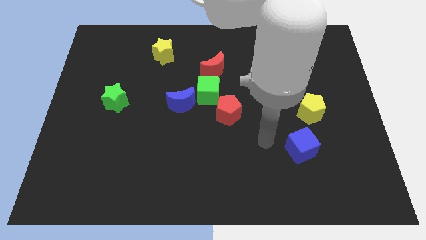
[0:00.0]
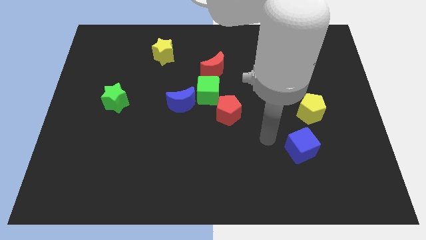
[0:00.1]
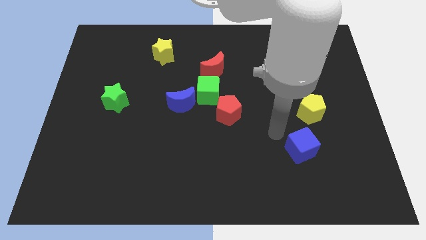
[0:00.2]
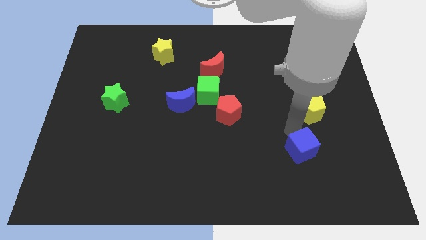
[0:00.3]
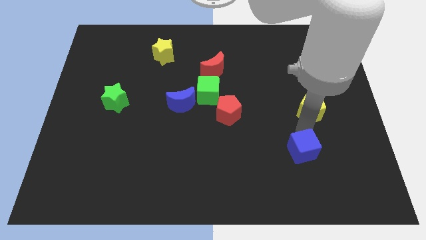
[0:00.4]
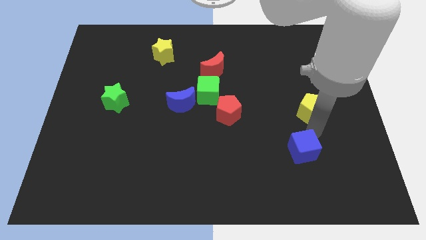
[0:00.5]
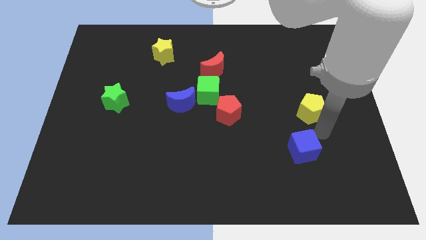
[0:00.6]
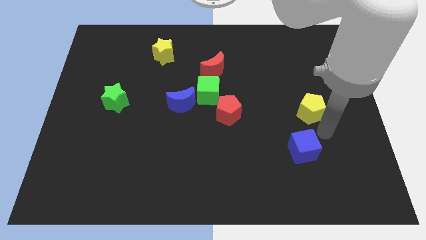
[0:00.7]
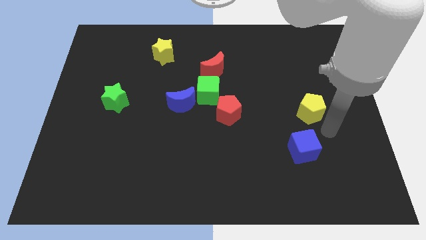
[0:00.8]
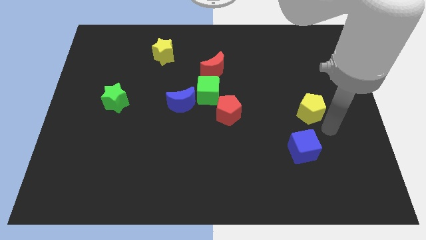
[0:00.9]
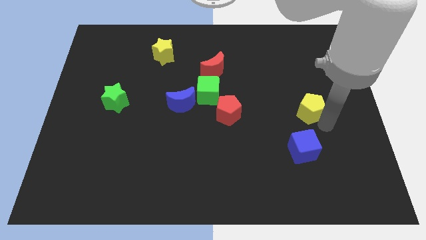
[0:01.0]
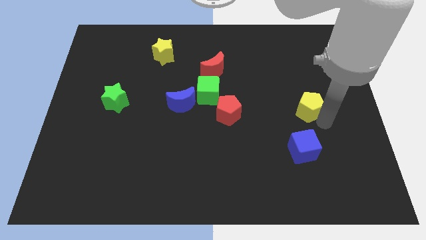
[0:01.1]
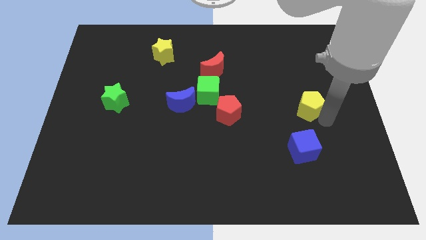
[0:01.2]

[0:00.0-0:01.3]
touch the bottom of yellow pentagon

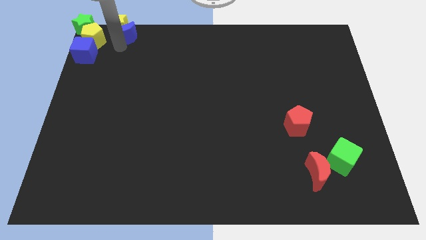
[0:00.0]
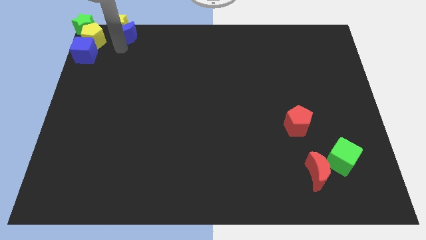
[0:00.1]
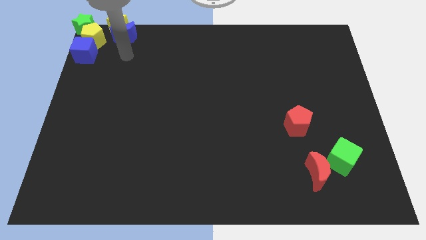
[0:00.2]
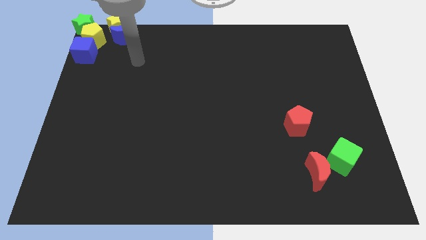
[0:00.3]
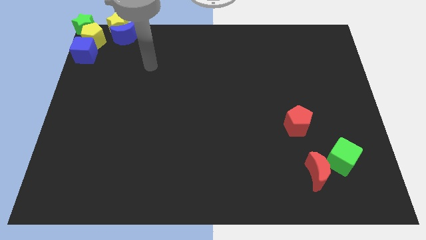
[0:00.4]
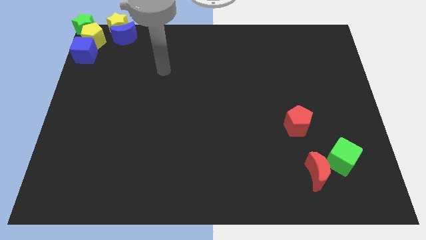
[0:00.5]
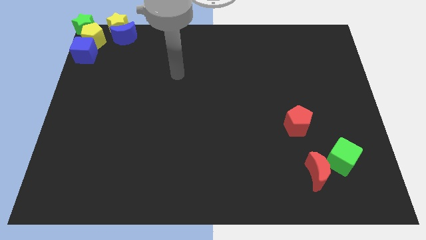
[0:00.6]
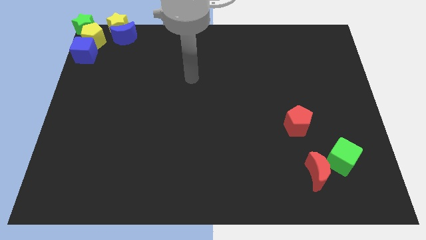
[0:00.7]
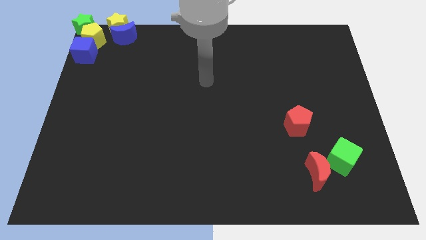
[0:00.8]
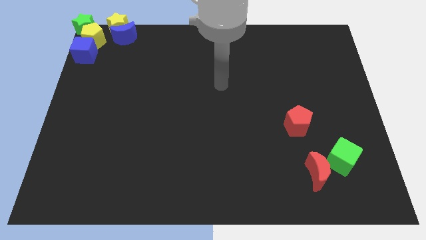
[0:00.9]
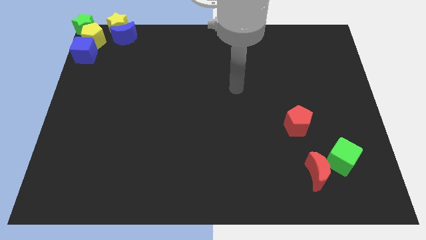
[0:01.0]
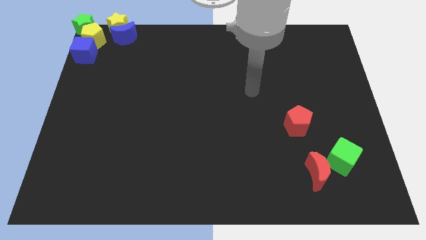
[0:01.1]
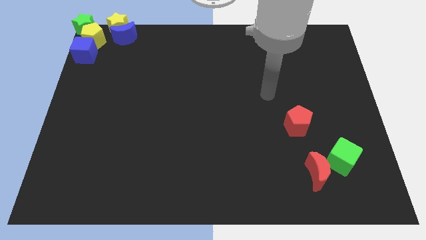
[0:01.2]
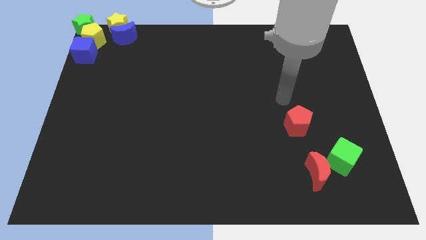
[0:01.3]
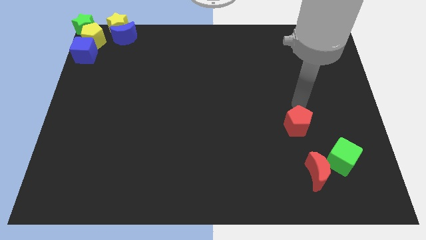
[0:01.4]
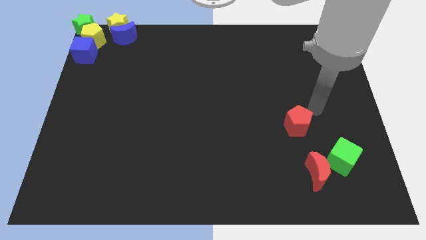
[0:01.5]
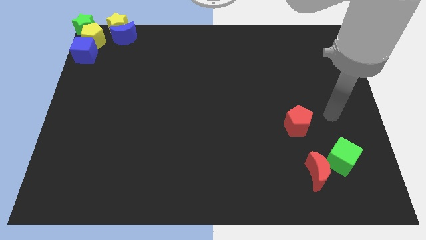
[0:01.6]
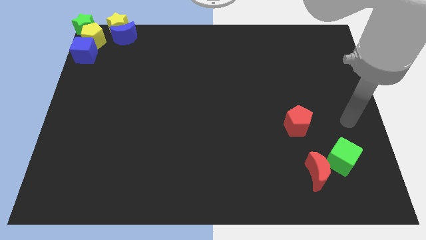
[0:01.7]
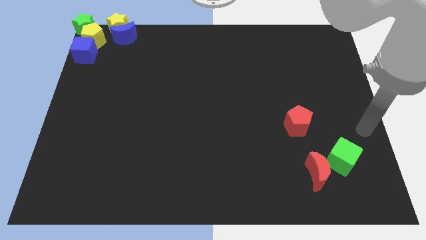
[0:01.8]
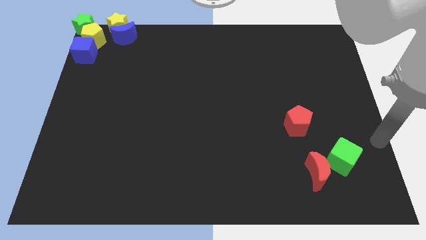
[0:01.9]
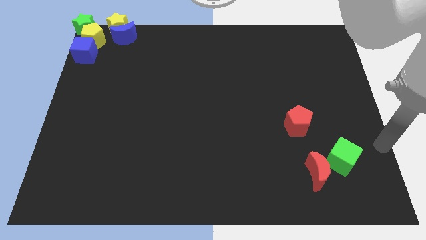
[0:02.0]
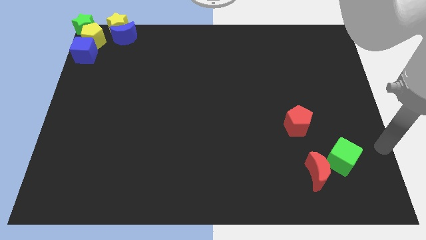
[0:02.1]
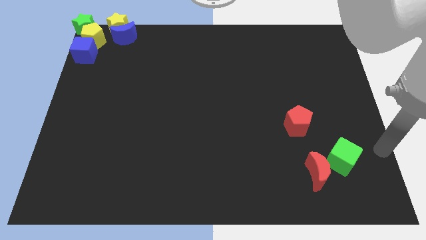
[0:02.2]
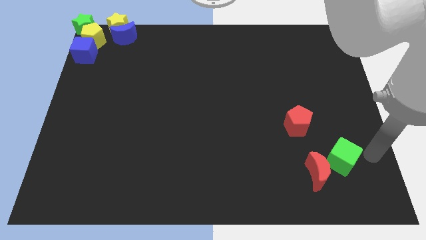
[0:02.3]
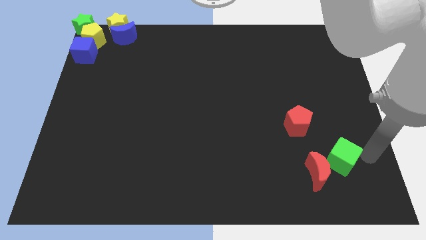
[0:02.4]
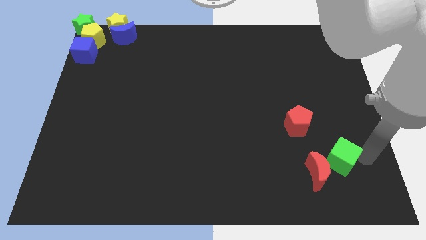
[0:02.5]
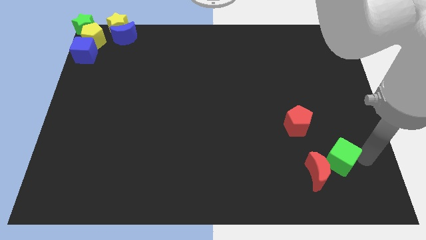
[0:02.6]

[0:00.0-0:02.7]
place your arm to the right of green cube

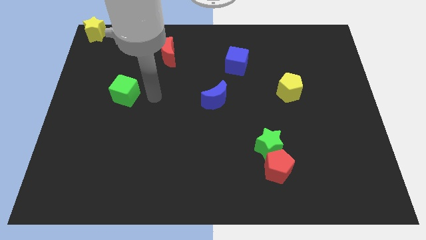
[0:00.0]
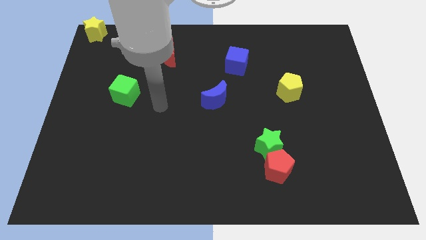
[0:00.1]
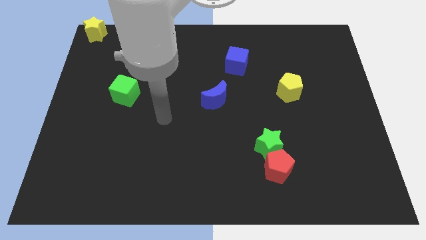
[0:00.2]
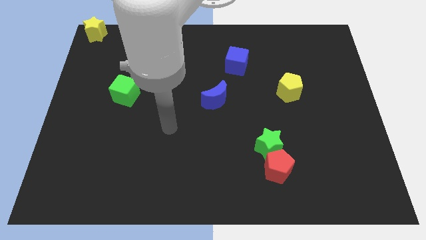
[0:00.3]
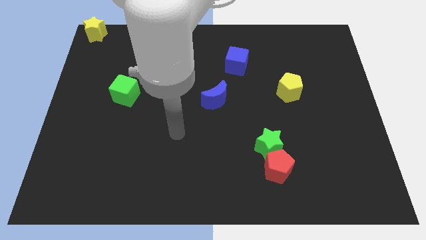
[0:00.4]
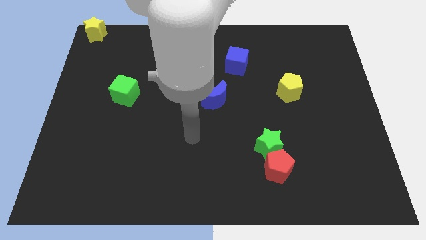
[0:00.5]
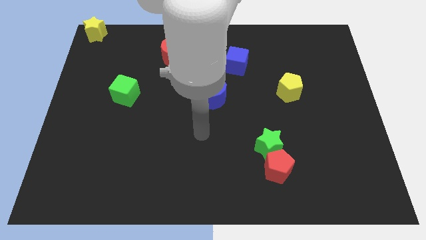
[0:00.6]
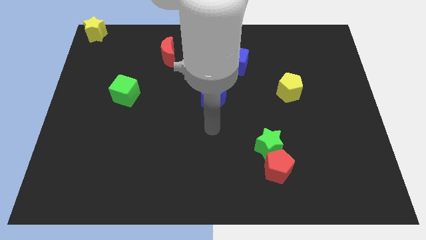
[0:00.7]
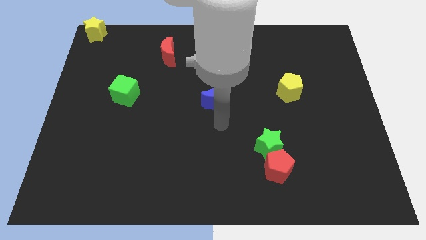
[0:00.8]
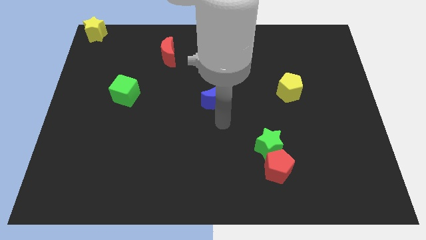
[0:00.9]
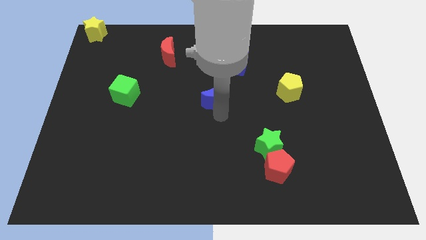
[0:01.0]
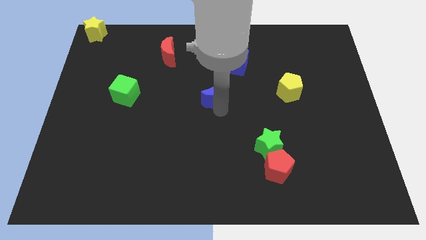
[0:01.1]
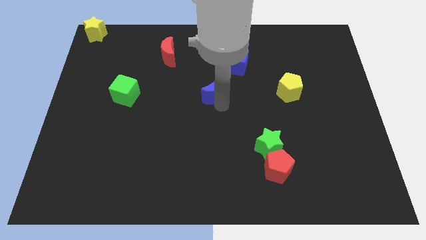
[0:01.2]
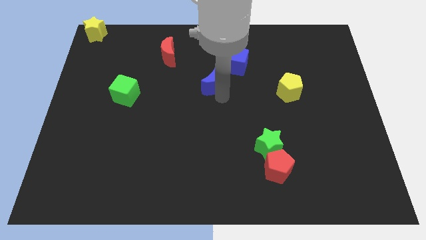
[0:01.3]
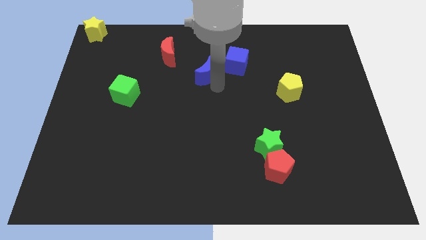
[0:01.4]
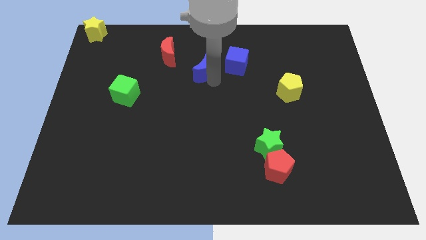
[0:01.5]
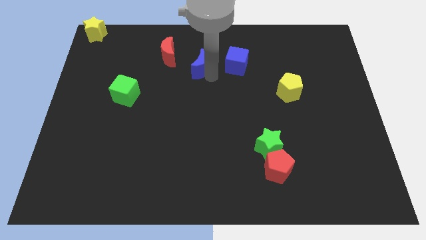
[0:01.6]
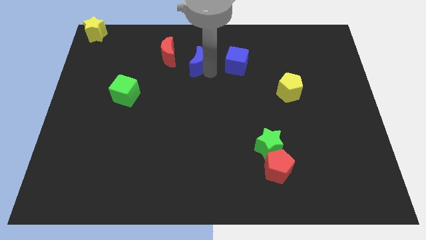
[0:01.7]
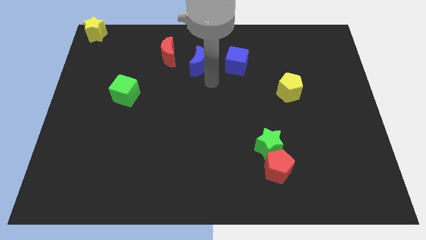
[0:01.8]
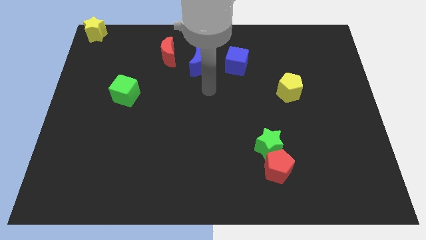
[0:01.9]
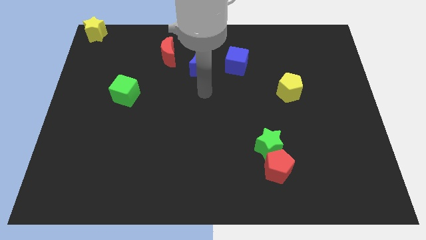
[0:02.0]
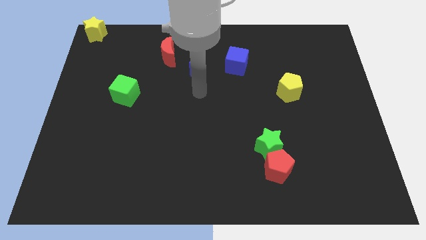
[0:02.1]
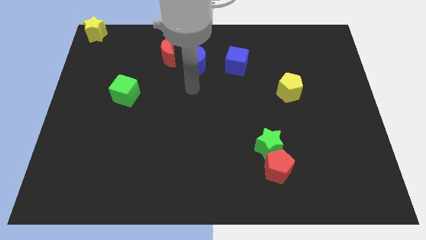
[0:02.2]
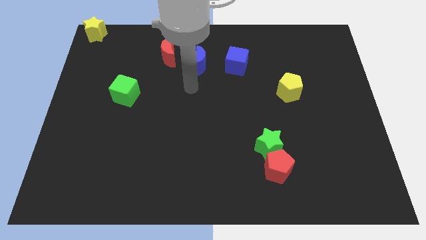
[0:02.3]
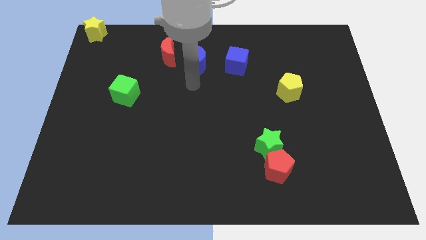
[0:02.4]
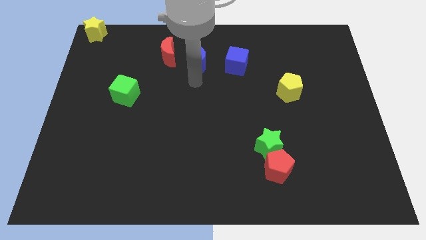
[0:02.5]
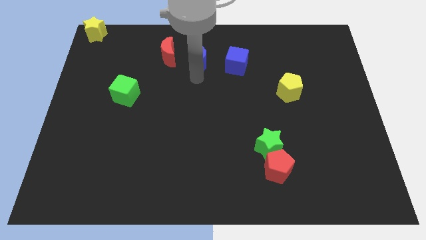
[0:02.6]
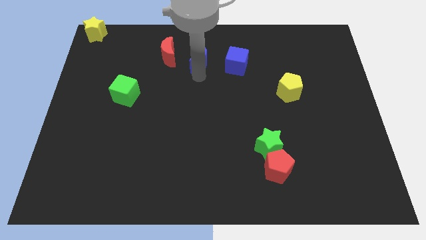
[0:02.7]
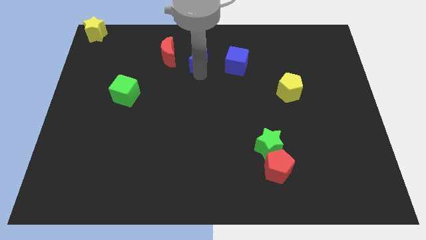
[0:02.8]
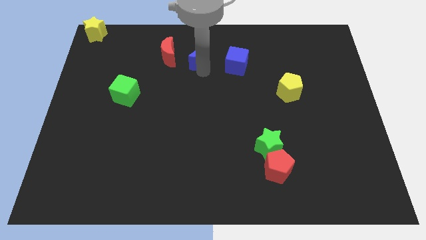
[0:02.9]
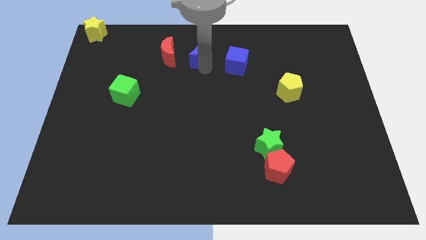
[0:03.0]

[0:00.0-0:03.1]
place the blue moon in between red moon and blue cube

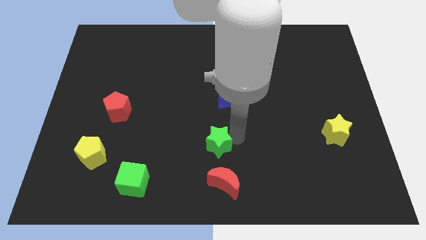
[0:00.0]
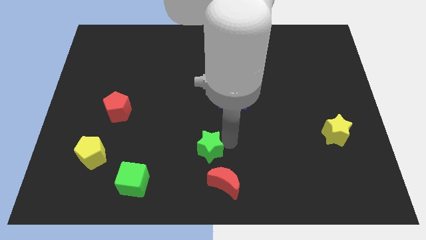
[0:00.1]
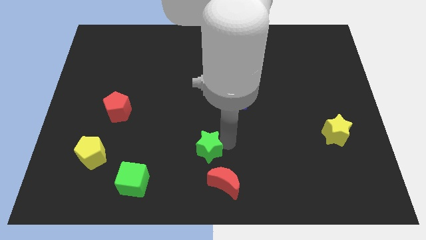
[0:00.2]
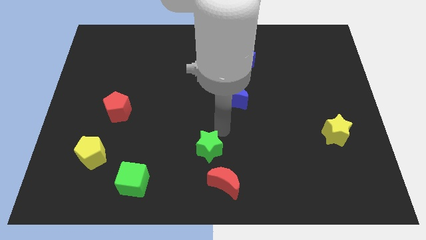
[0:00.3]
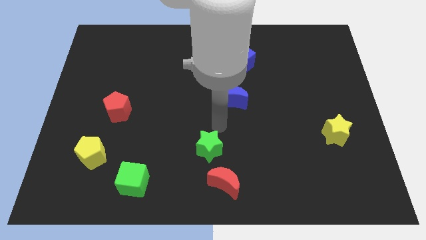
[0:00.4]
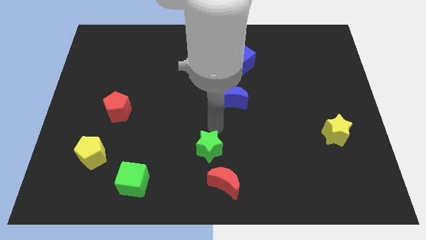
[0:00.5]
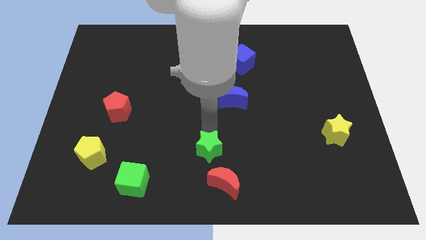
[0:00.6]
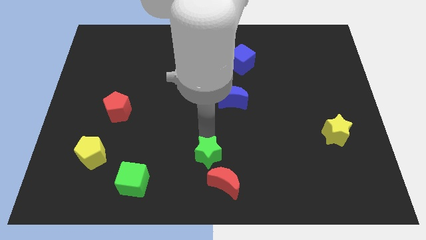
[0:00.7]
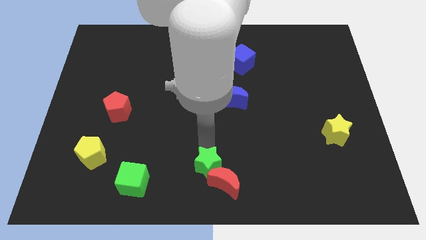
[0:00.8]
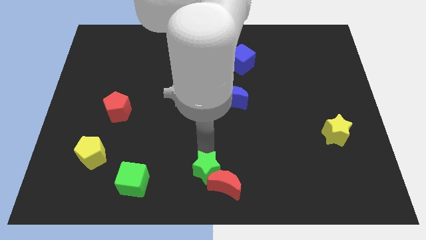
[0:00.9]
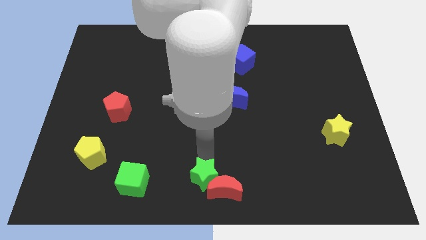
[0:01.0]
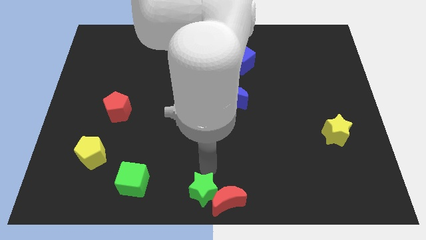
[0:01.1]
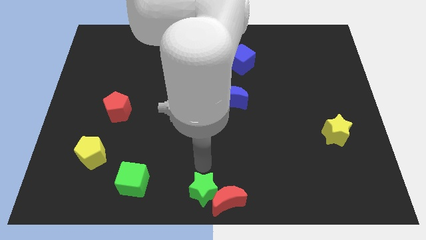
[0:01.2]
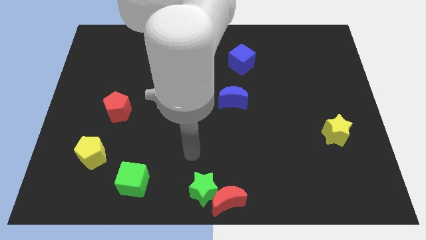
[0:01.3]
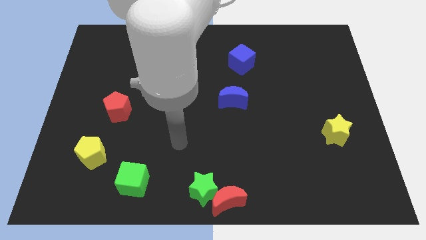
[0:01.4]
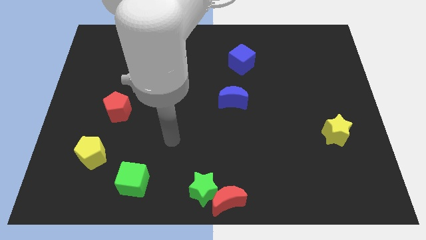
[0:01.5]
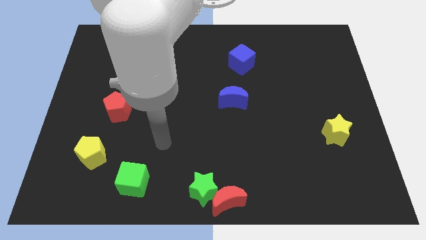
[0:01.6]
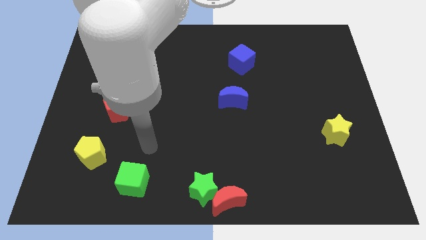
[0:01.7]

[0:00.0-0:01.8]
place the green star and red moon at the bottom center of the board
